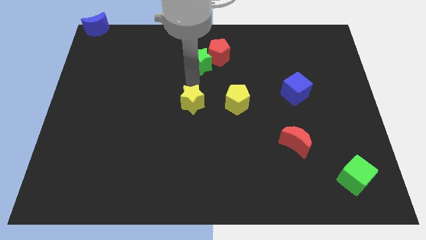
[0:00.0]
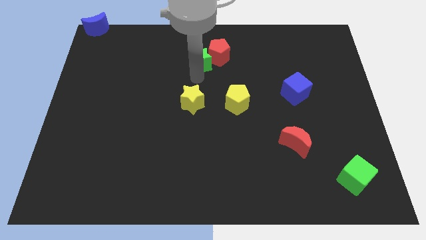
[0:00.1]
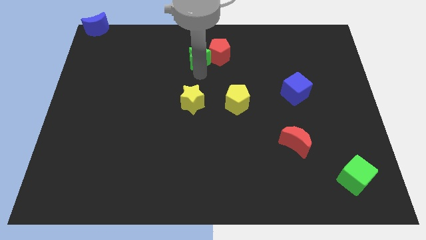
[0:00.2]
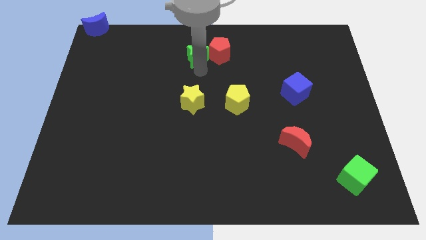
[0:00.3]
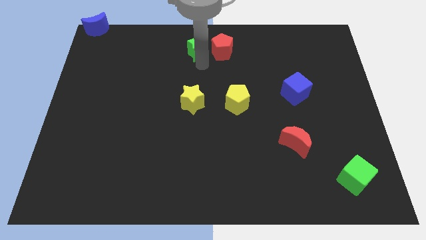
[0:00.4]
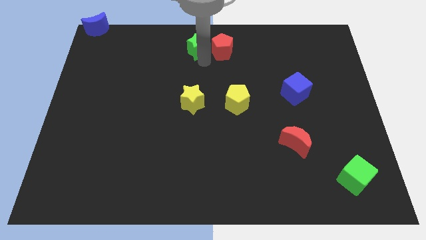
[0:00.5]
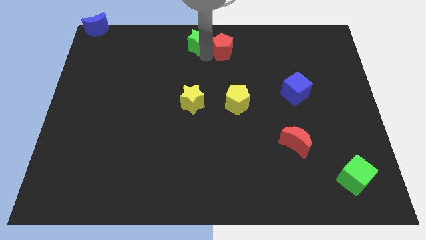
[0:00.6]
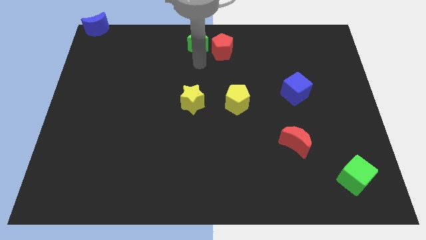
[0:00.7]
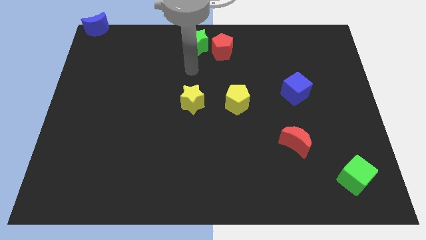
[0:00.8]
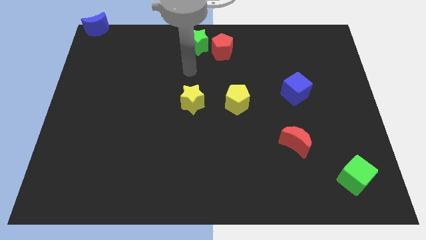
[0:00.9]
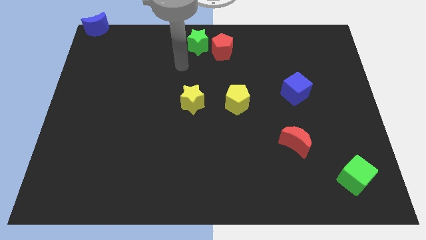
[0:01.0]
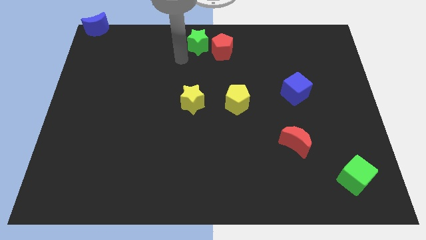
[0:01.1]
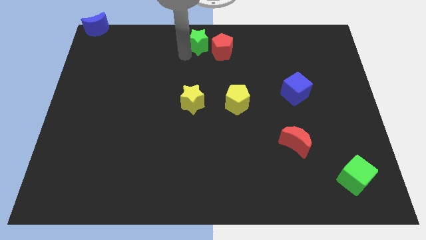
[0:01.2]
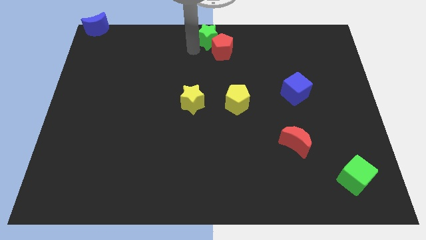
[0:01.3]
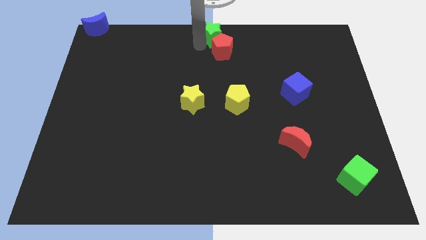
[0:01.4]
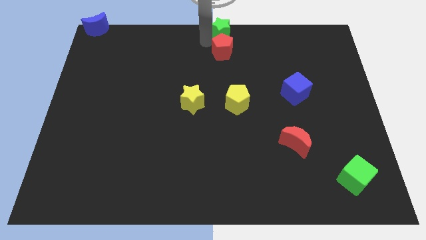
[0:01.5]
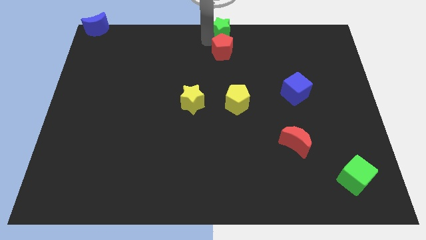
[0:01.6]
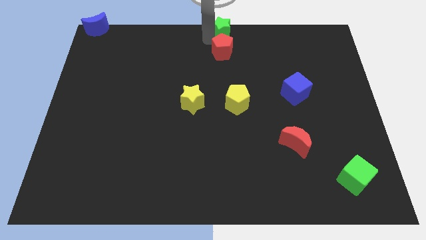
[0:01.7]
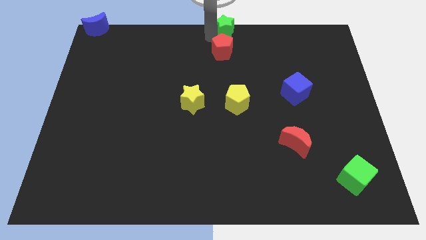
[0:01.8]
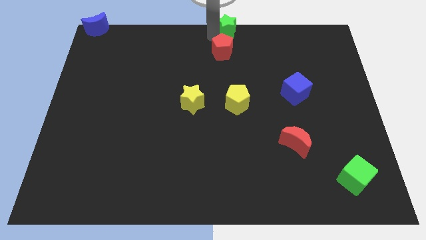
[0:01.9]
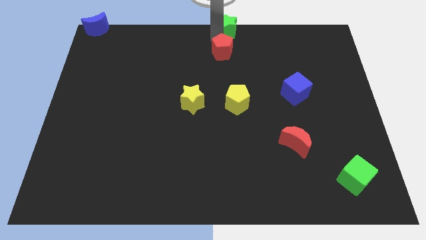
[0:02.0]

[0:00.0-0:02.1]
place the green star on top of red pentagon

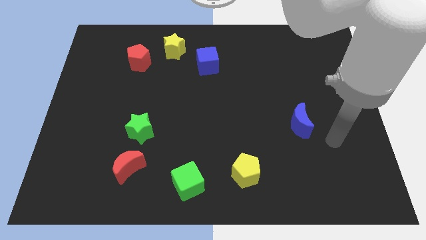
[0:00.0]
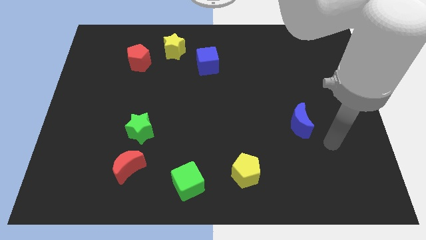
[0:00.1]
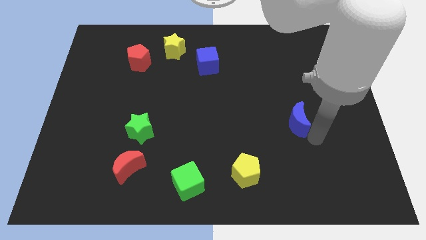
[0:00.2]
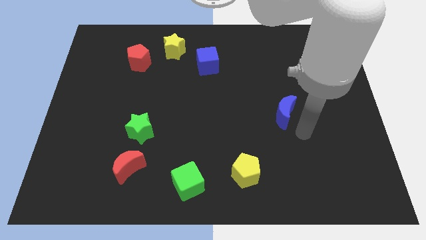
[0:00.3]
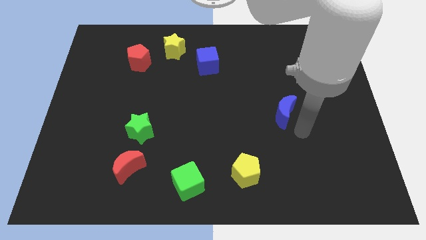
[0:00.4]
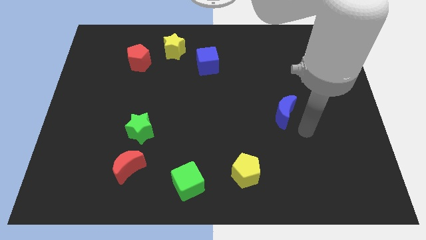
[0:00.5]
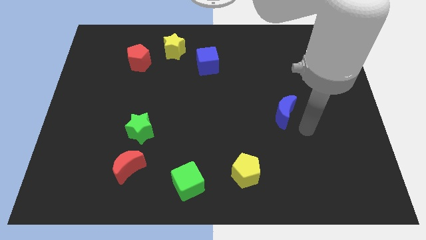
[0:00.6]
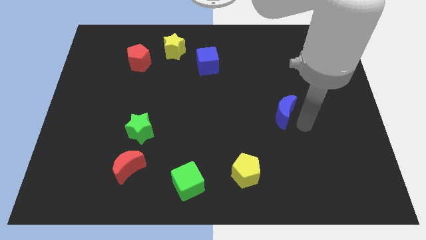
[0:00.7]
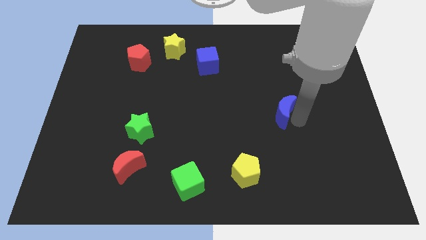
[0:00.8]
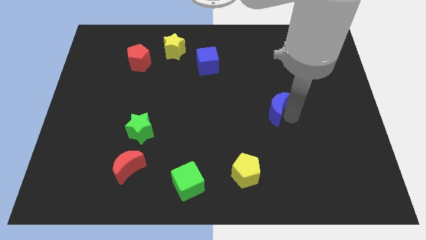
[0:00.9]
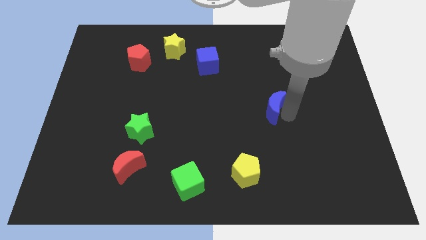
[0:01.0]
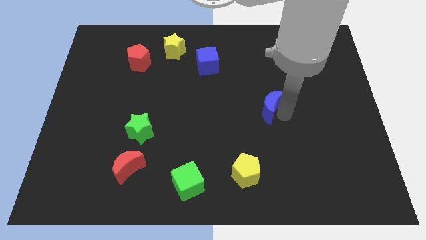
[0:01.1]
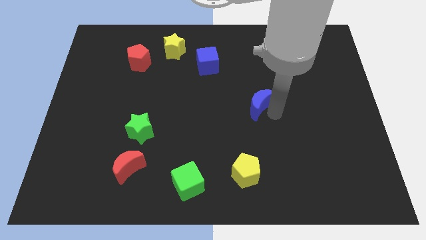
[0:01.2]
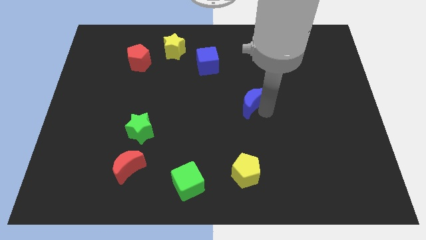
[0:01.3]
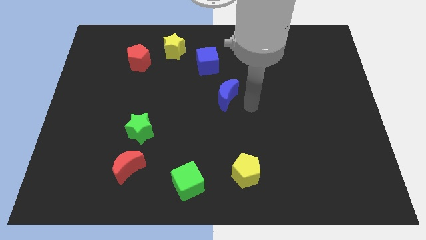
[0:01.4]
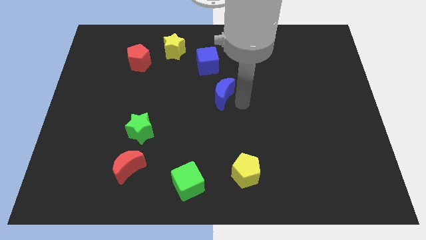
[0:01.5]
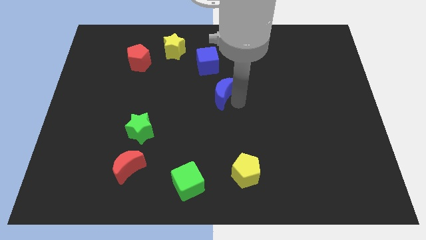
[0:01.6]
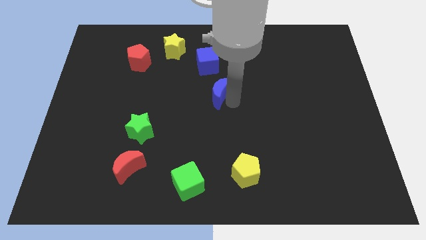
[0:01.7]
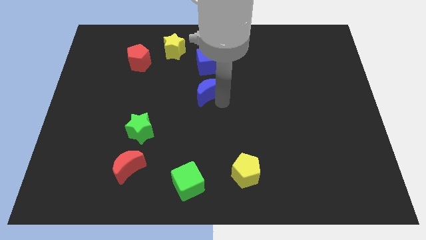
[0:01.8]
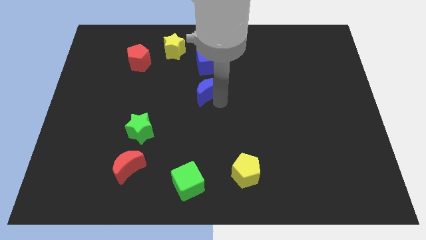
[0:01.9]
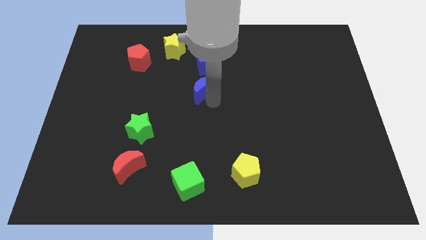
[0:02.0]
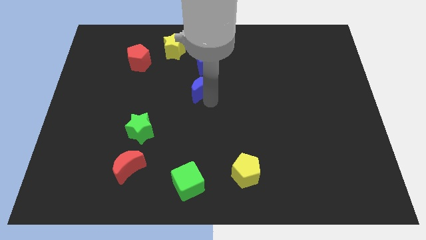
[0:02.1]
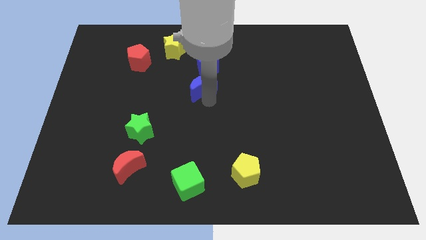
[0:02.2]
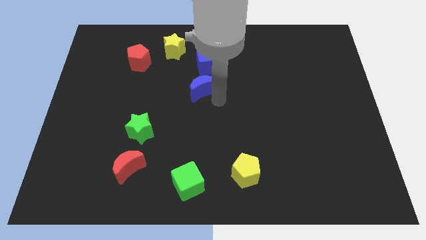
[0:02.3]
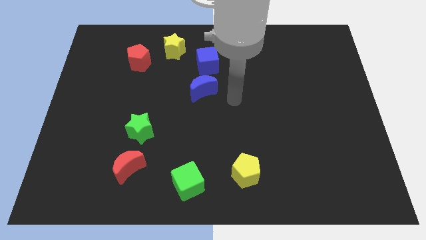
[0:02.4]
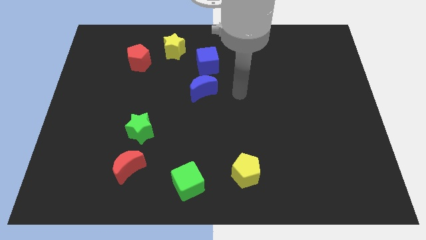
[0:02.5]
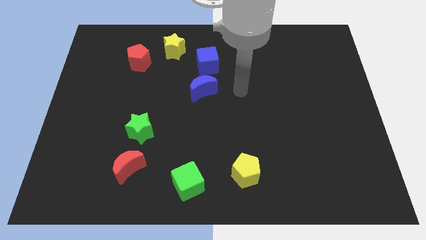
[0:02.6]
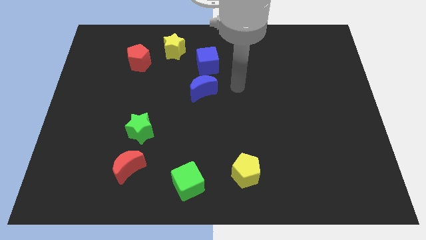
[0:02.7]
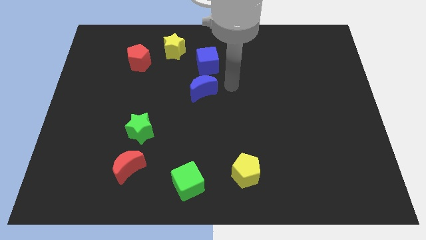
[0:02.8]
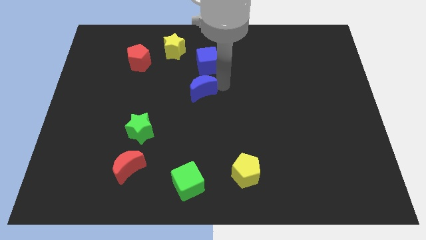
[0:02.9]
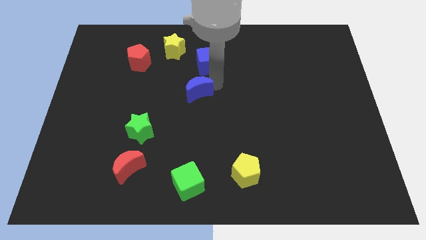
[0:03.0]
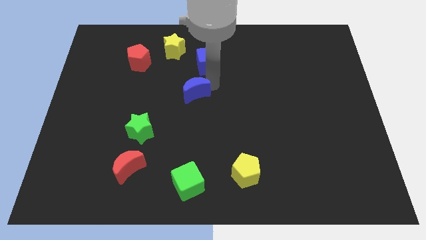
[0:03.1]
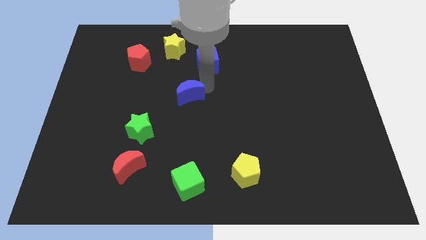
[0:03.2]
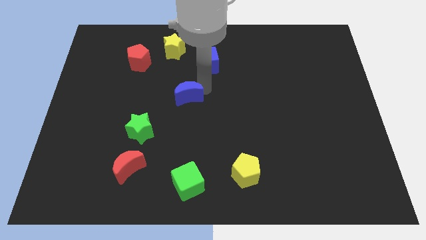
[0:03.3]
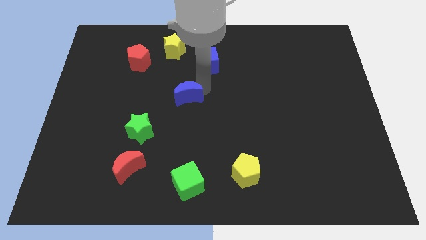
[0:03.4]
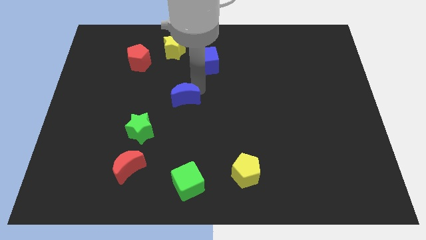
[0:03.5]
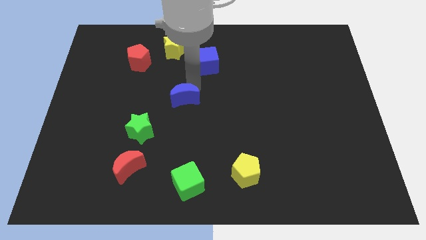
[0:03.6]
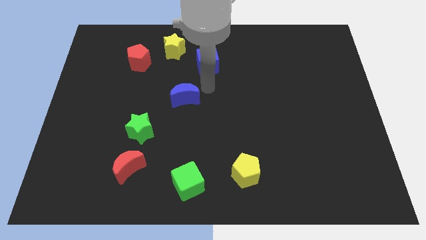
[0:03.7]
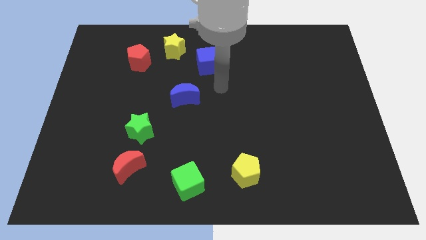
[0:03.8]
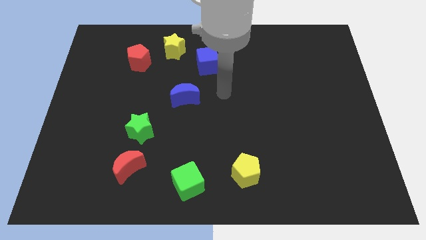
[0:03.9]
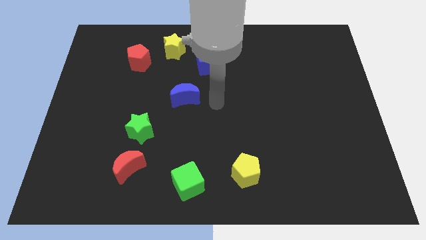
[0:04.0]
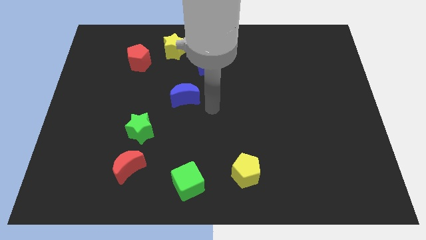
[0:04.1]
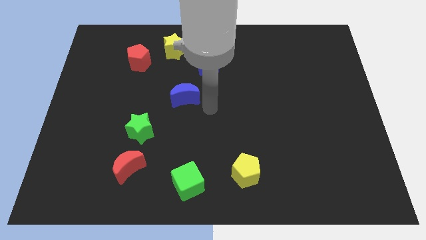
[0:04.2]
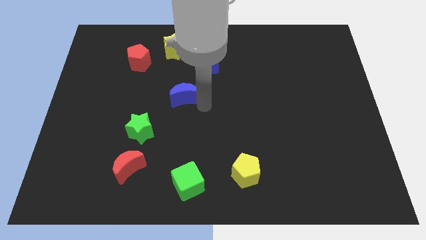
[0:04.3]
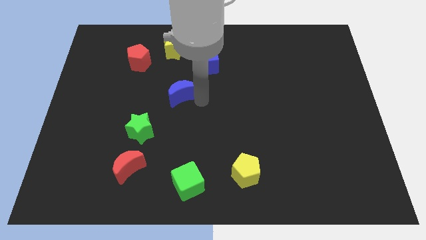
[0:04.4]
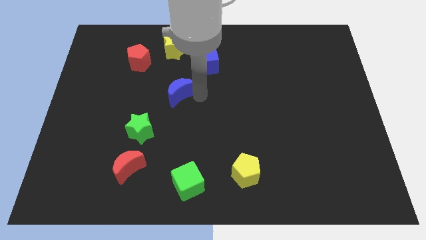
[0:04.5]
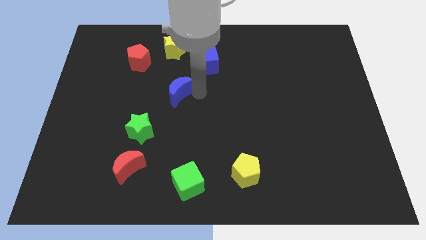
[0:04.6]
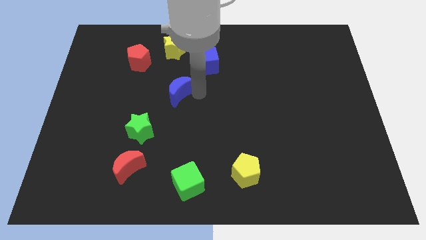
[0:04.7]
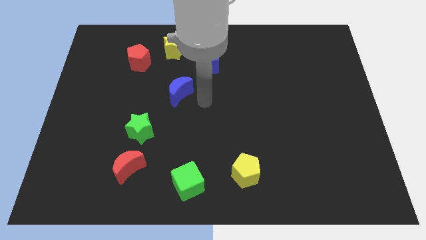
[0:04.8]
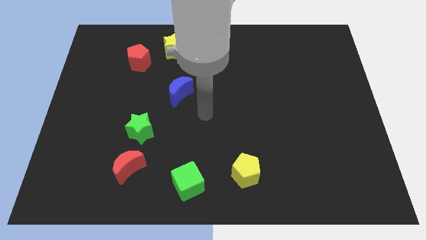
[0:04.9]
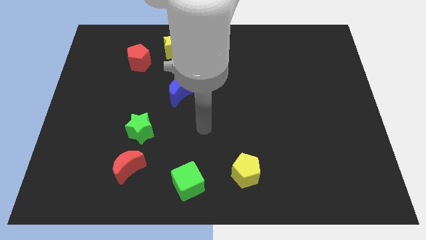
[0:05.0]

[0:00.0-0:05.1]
place the blue moon in between the green star and the blue cube

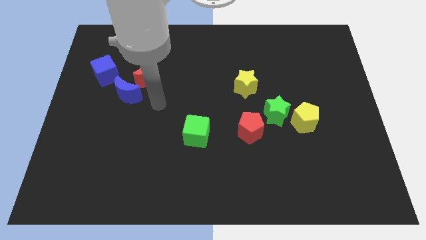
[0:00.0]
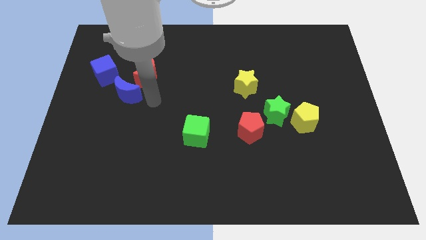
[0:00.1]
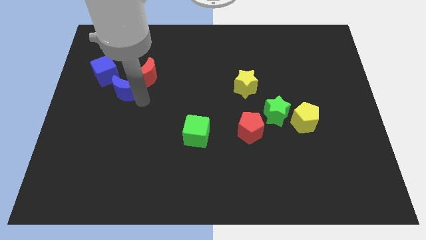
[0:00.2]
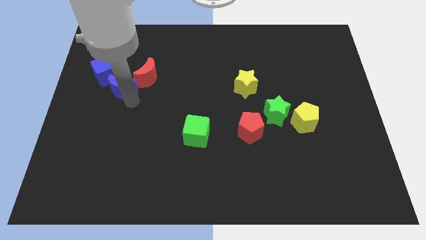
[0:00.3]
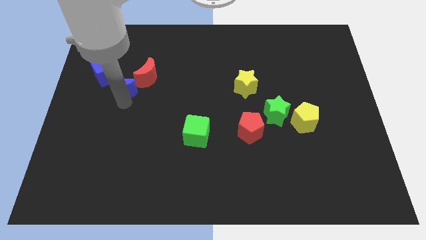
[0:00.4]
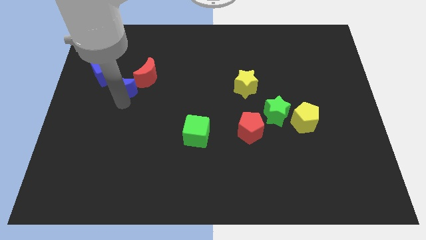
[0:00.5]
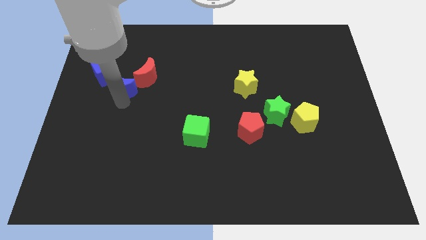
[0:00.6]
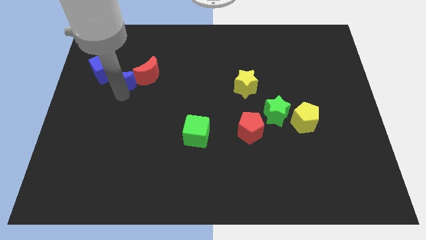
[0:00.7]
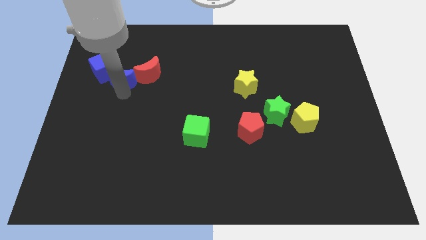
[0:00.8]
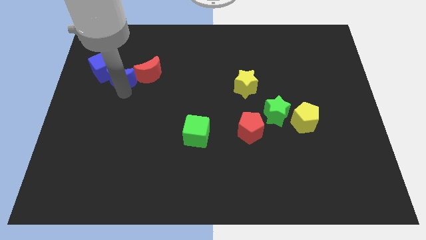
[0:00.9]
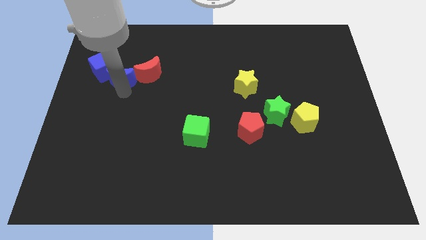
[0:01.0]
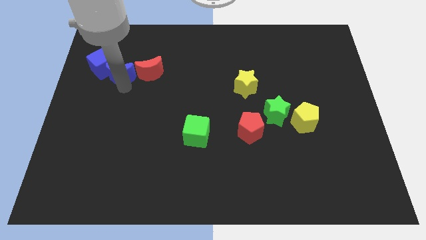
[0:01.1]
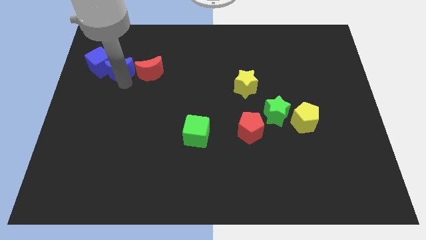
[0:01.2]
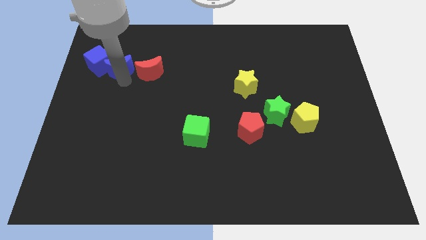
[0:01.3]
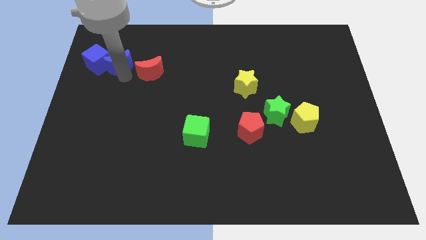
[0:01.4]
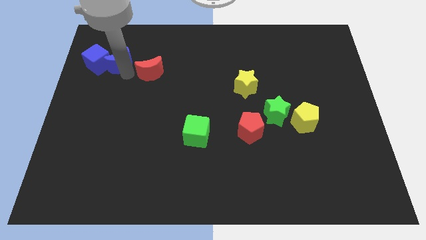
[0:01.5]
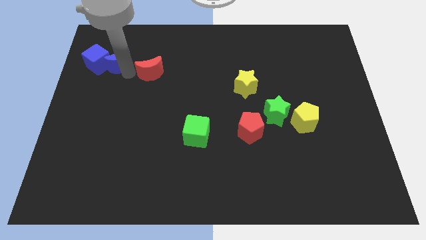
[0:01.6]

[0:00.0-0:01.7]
slide the blue moon into the blue cube
